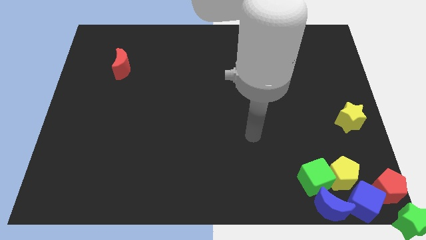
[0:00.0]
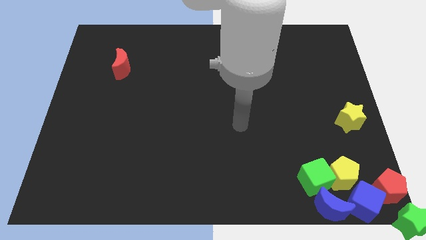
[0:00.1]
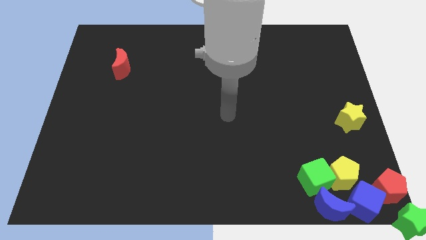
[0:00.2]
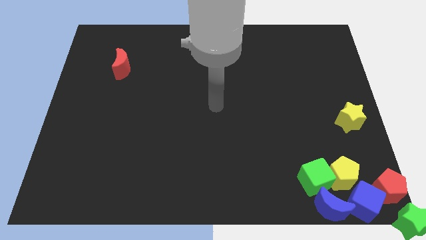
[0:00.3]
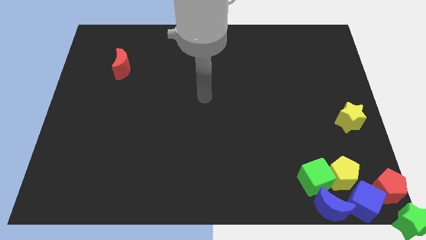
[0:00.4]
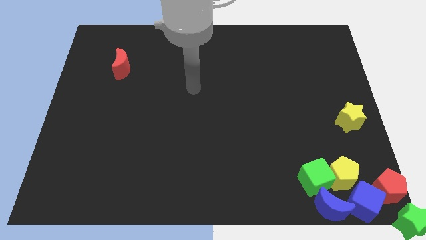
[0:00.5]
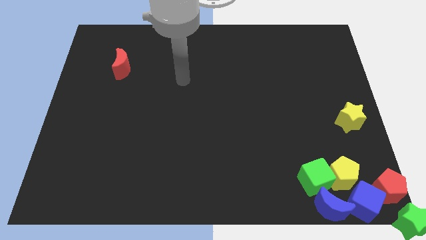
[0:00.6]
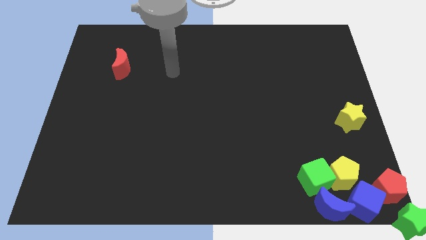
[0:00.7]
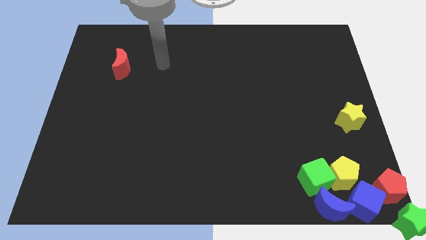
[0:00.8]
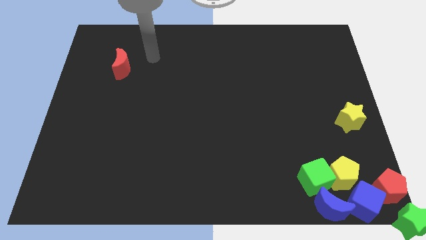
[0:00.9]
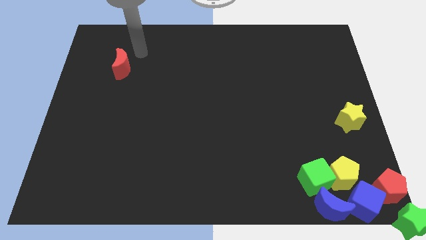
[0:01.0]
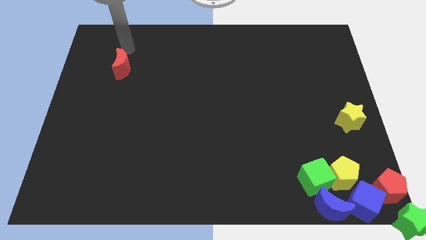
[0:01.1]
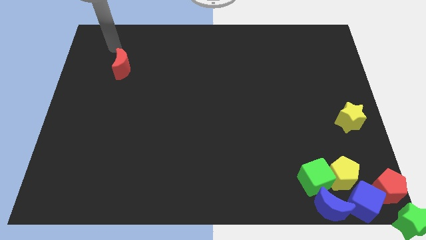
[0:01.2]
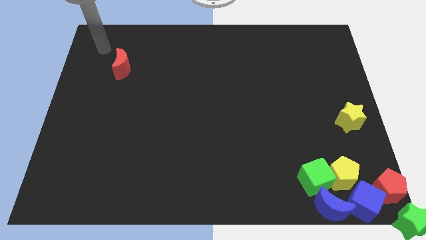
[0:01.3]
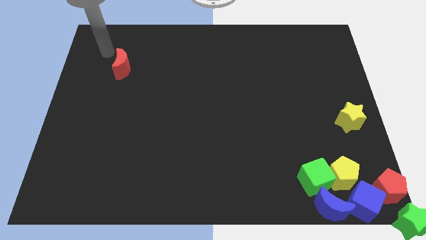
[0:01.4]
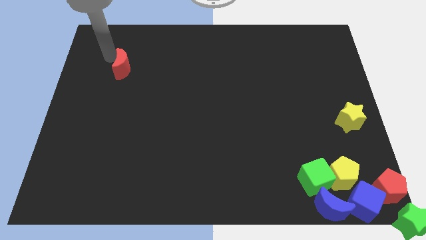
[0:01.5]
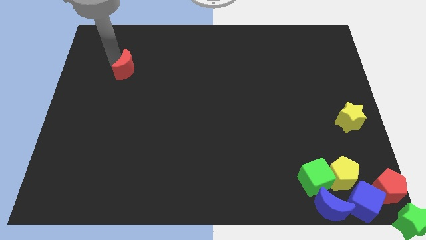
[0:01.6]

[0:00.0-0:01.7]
place your arm to the top left of the red moon

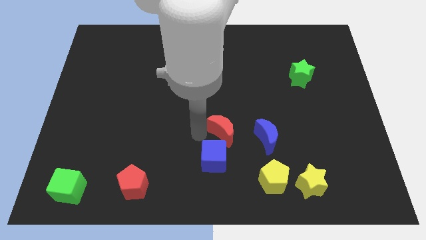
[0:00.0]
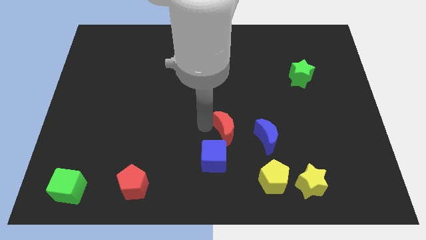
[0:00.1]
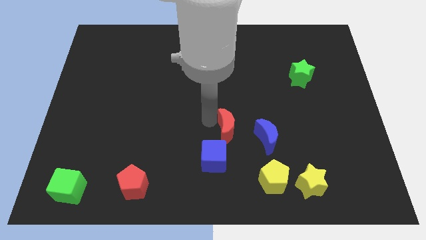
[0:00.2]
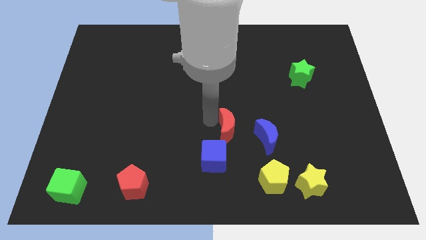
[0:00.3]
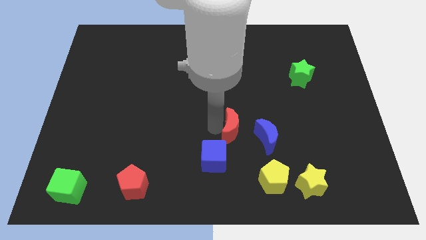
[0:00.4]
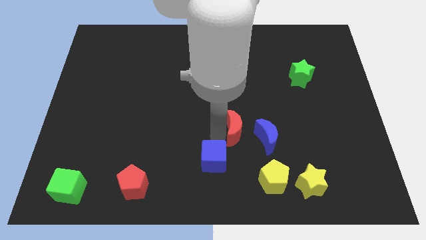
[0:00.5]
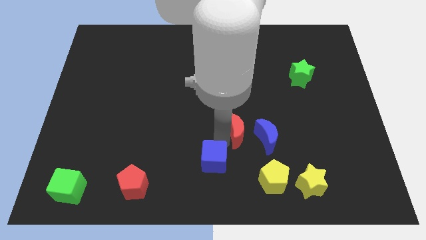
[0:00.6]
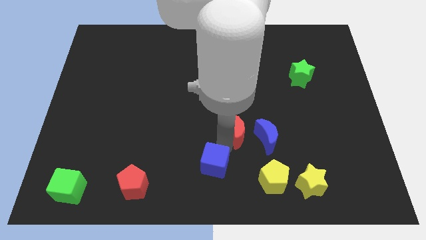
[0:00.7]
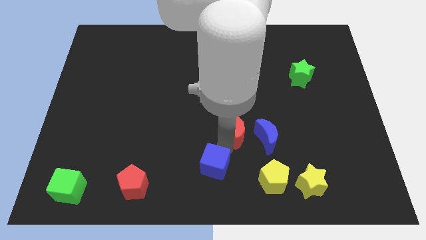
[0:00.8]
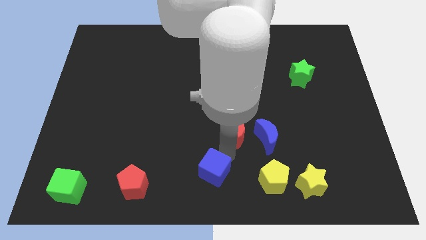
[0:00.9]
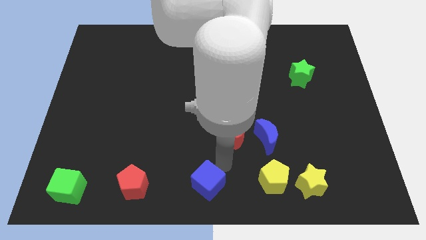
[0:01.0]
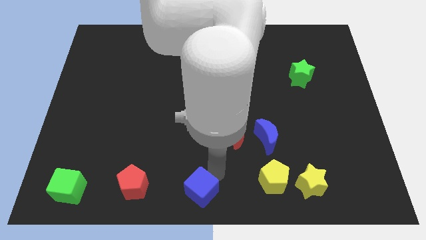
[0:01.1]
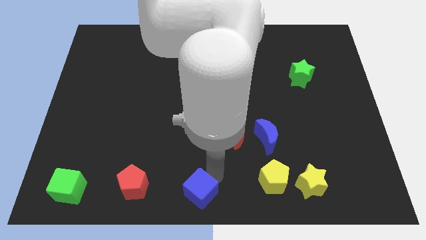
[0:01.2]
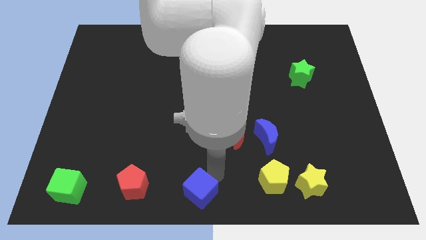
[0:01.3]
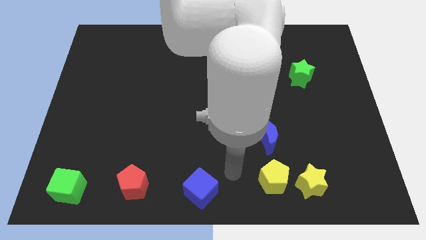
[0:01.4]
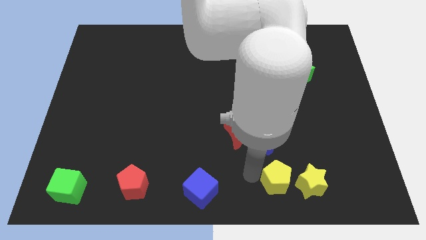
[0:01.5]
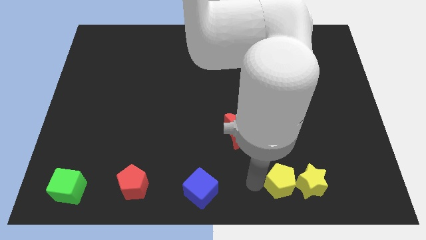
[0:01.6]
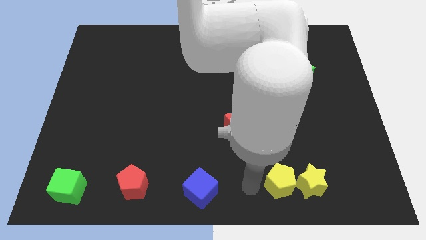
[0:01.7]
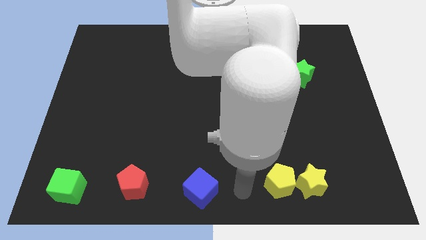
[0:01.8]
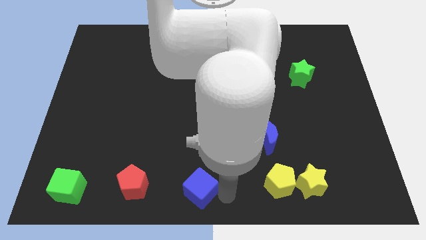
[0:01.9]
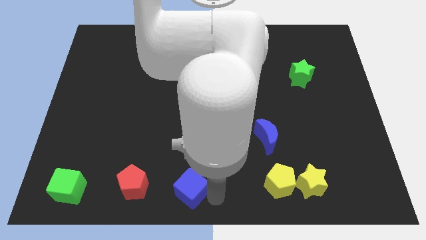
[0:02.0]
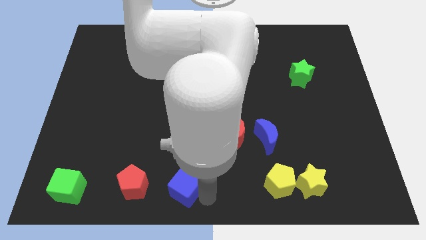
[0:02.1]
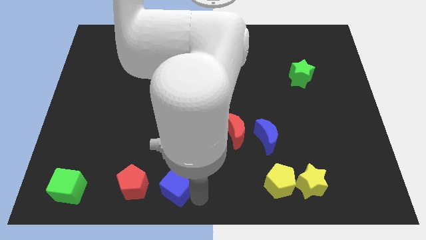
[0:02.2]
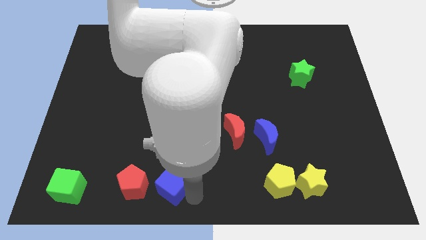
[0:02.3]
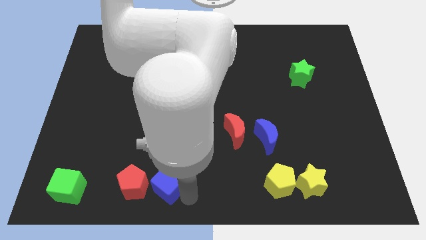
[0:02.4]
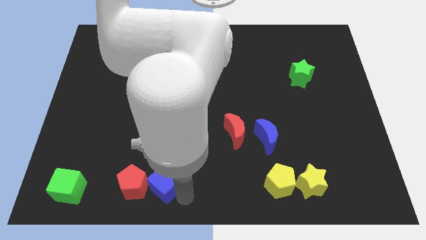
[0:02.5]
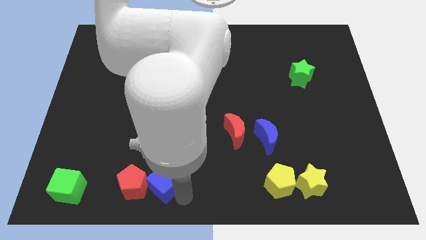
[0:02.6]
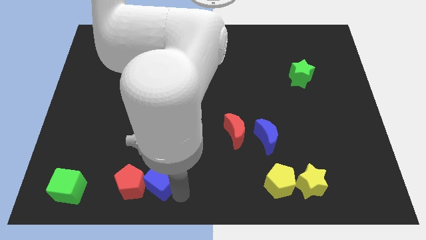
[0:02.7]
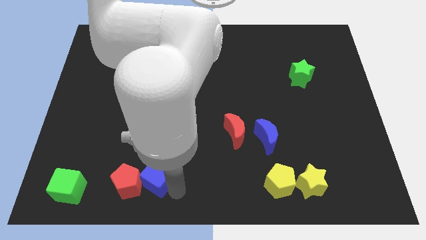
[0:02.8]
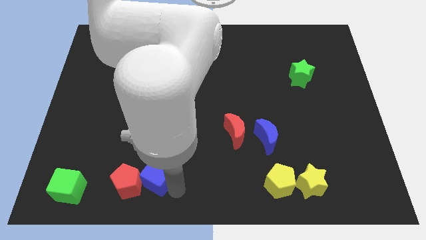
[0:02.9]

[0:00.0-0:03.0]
move the blue cube to right side of the red pentagon

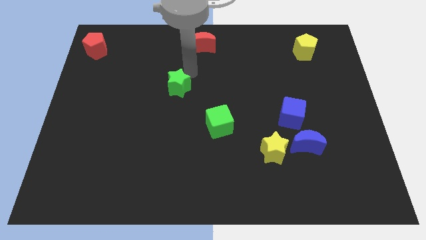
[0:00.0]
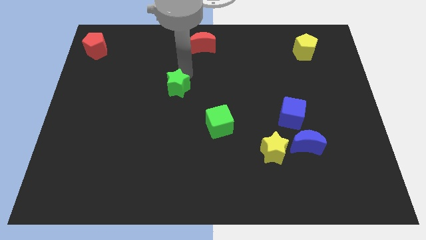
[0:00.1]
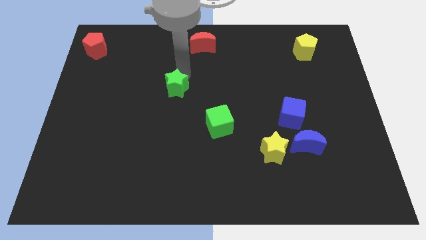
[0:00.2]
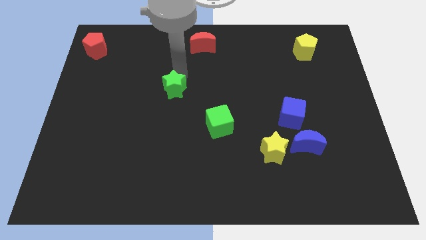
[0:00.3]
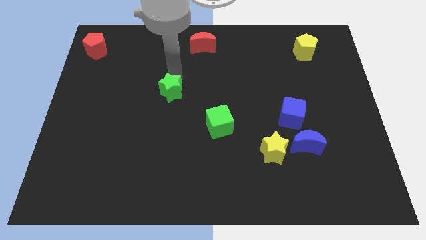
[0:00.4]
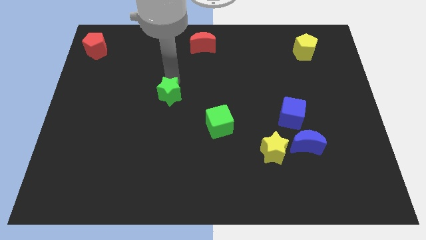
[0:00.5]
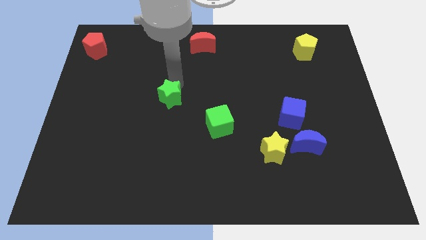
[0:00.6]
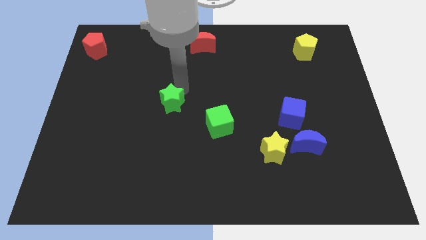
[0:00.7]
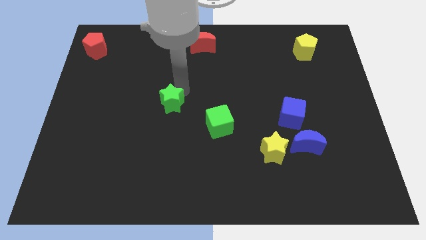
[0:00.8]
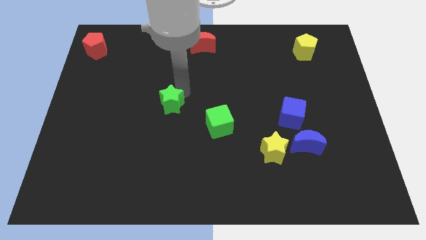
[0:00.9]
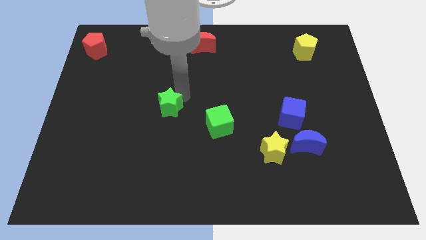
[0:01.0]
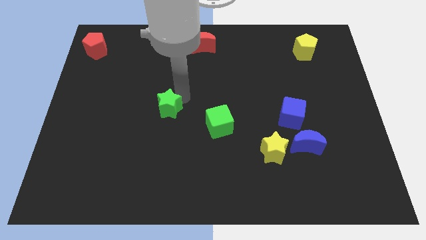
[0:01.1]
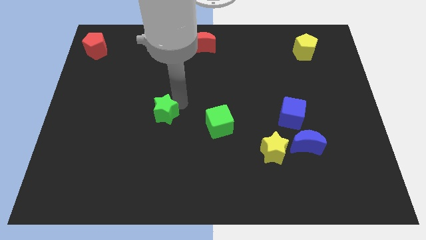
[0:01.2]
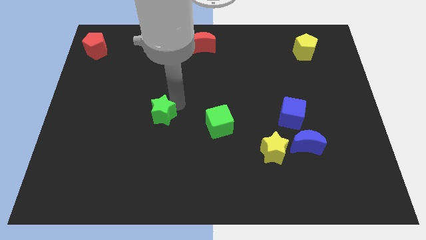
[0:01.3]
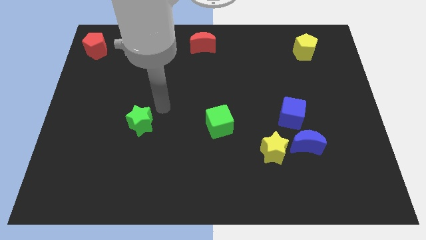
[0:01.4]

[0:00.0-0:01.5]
move the green star to the left of the green cube

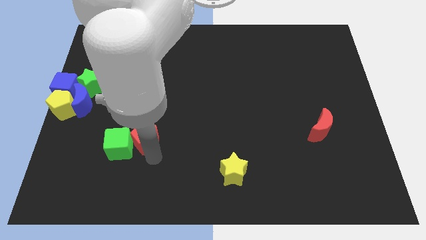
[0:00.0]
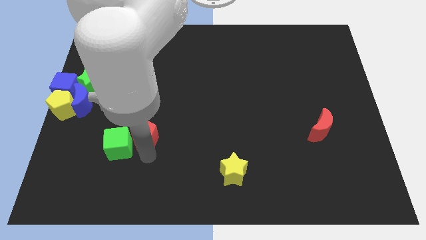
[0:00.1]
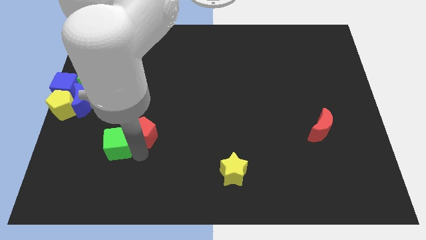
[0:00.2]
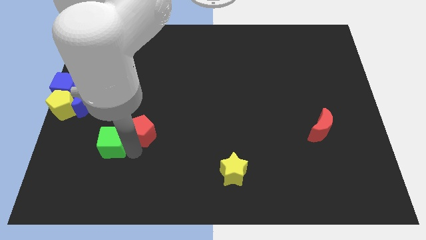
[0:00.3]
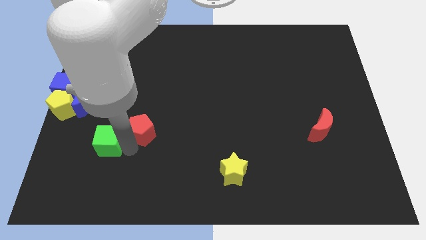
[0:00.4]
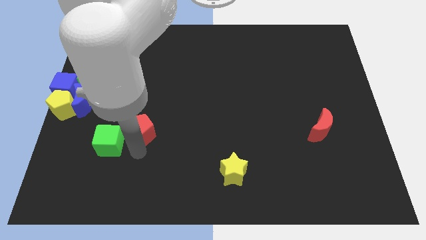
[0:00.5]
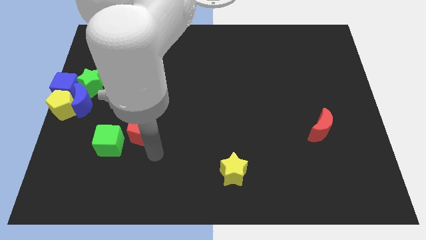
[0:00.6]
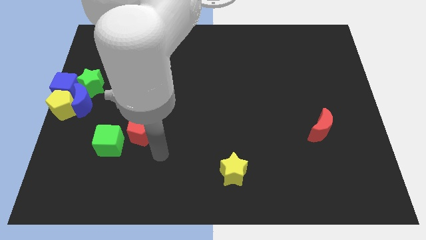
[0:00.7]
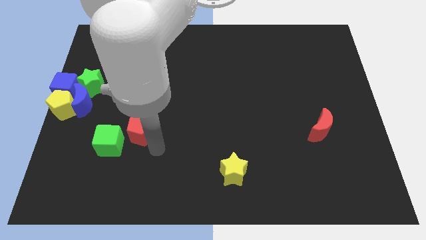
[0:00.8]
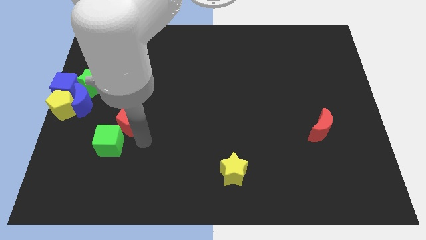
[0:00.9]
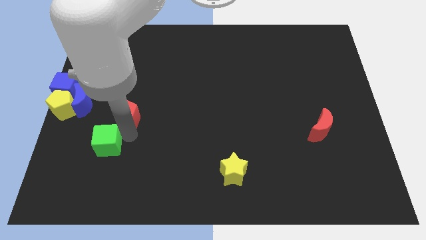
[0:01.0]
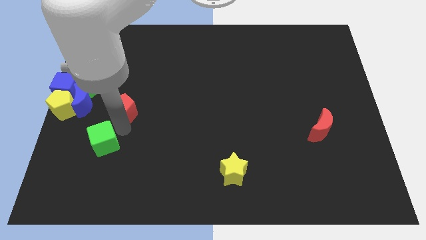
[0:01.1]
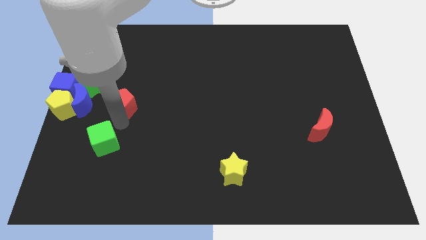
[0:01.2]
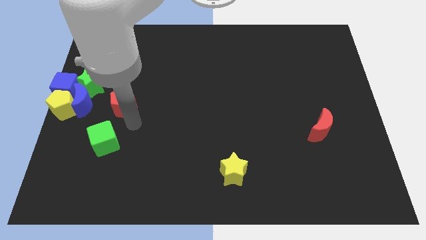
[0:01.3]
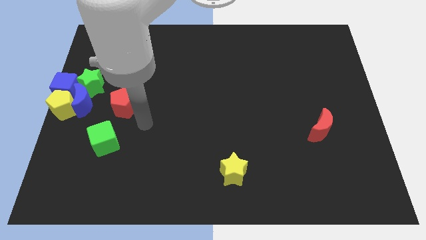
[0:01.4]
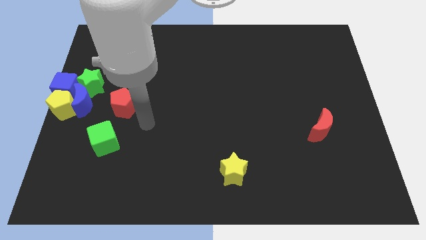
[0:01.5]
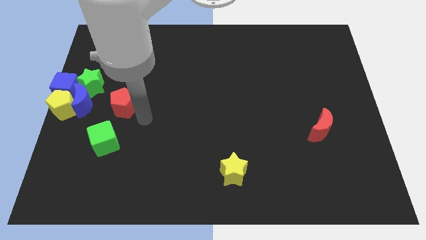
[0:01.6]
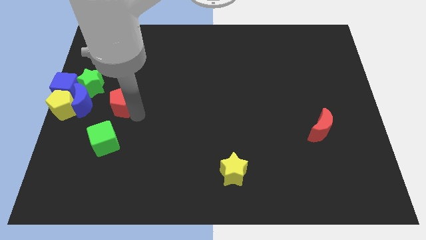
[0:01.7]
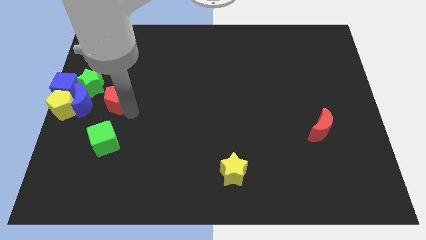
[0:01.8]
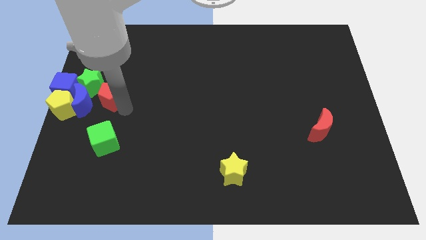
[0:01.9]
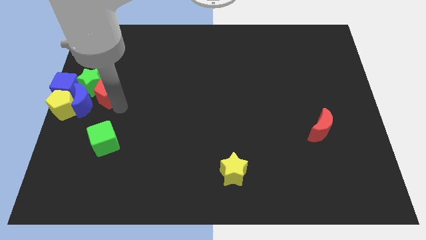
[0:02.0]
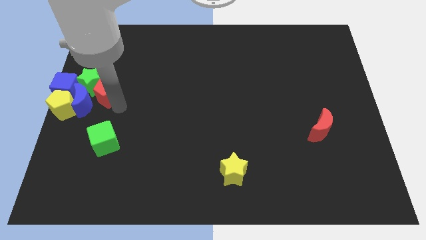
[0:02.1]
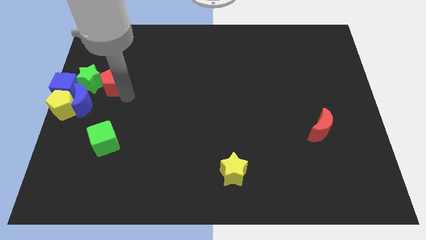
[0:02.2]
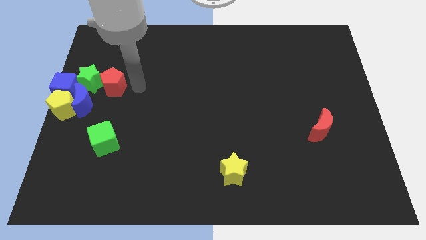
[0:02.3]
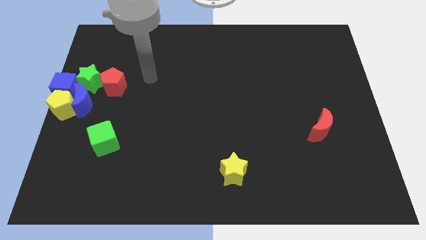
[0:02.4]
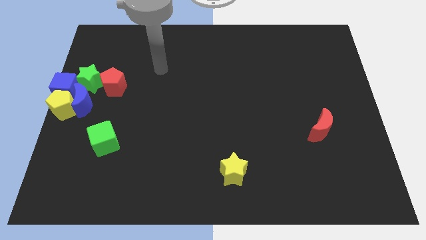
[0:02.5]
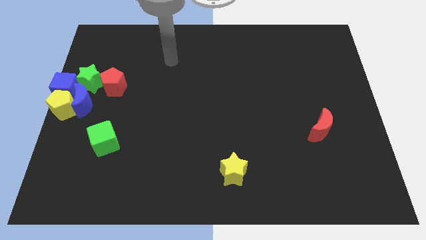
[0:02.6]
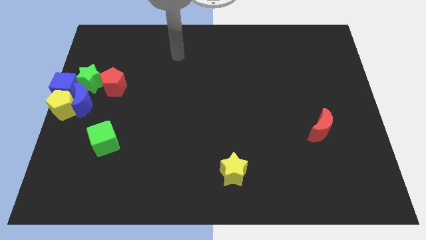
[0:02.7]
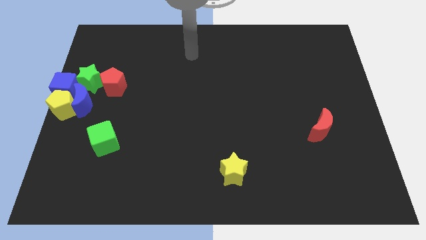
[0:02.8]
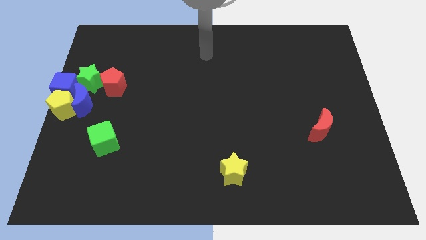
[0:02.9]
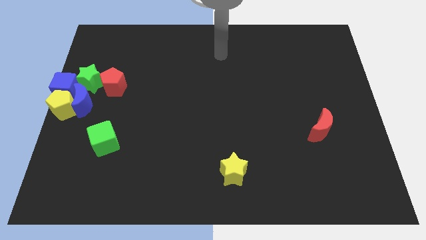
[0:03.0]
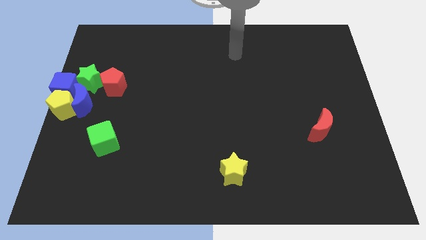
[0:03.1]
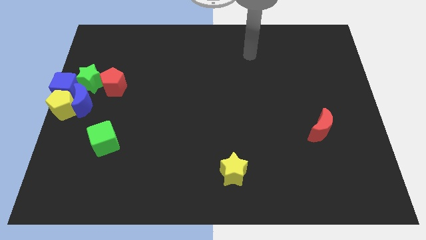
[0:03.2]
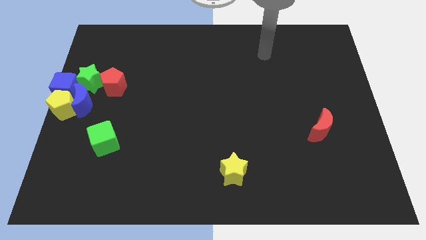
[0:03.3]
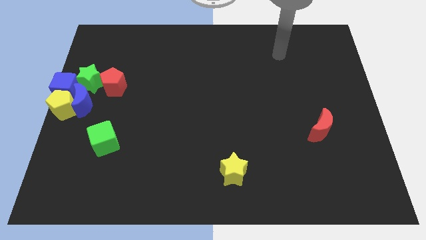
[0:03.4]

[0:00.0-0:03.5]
place red pentagon to the right of green star
